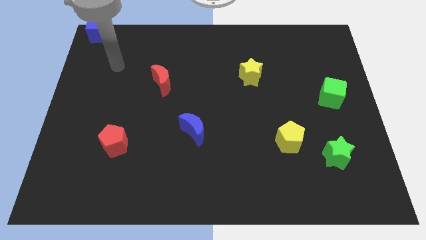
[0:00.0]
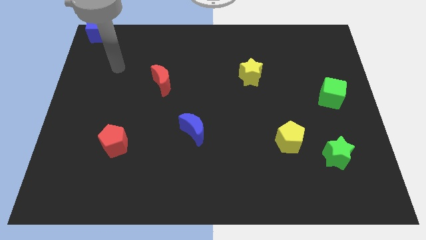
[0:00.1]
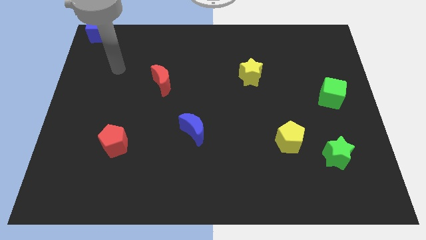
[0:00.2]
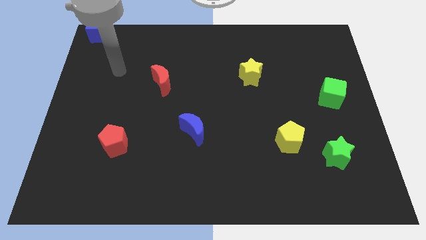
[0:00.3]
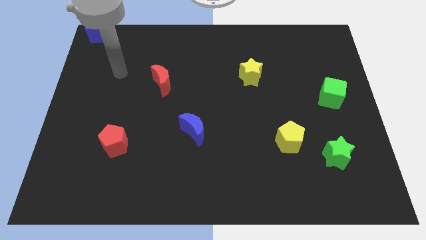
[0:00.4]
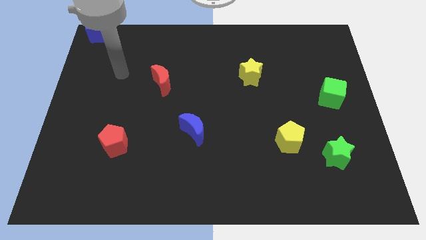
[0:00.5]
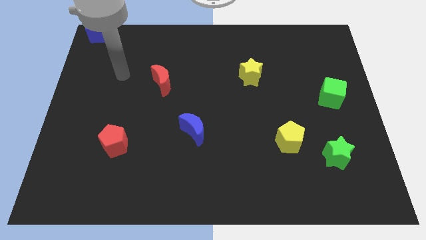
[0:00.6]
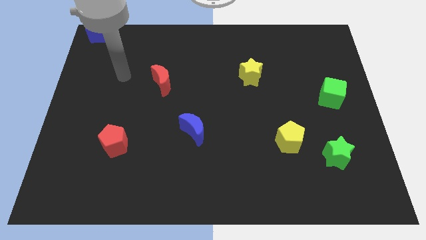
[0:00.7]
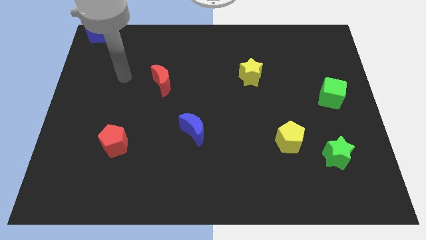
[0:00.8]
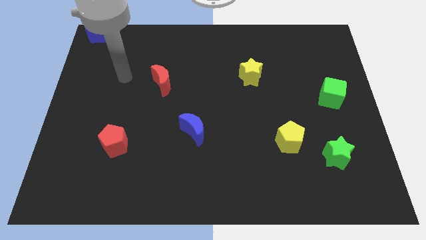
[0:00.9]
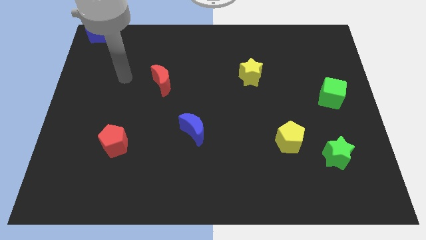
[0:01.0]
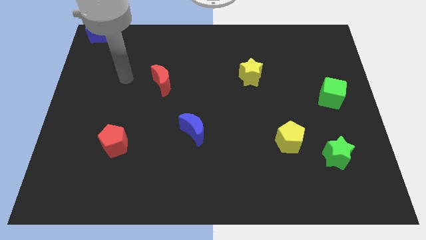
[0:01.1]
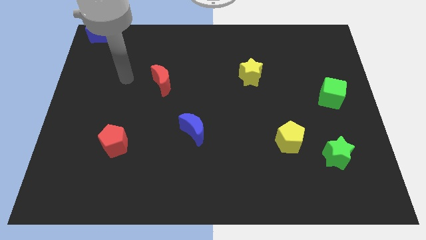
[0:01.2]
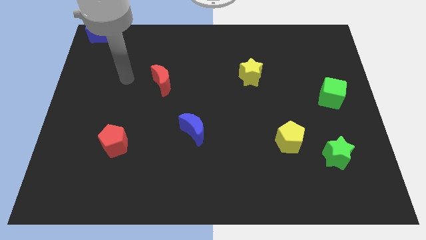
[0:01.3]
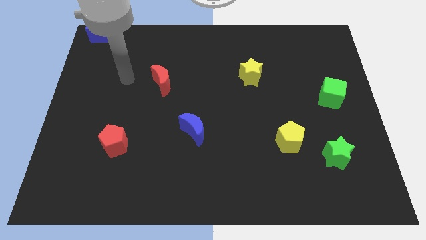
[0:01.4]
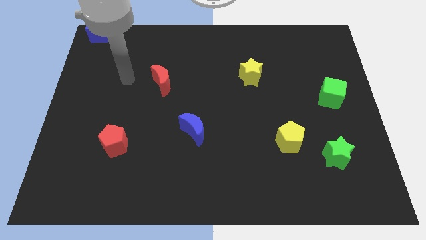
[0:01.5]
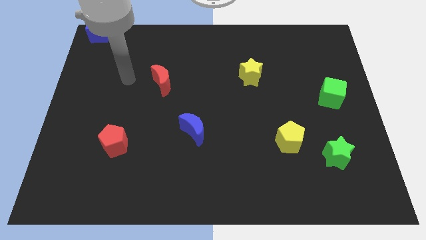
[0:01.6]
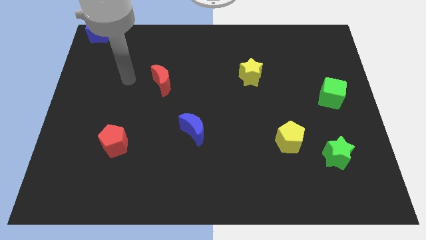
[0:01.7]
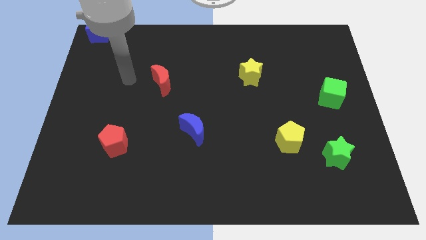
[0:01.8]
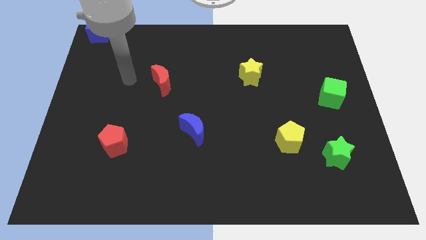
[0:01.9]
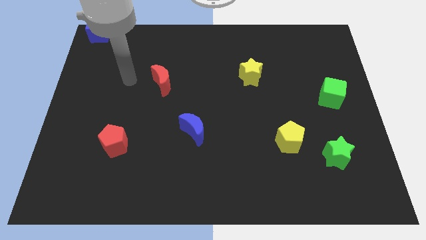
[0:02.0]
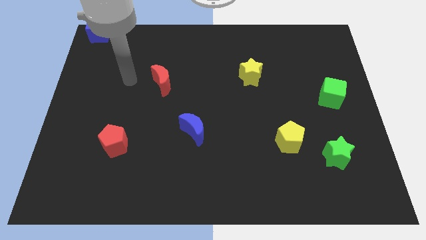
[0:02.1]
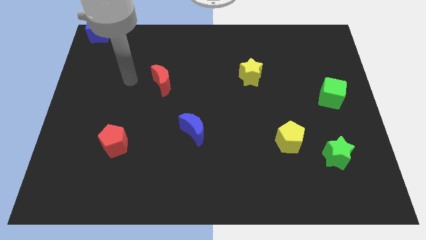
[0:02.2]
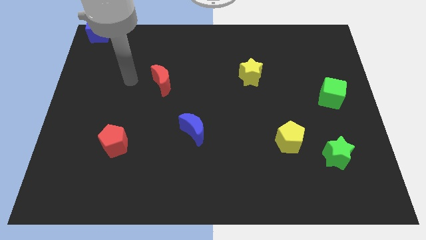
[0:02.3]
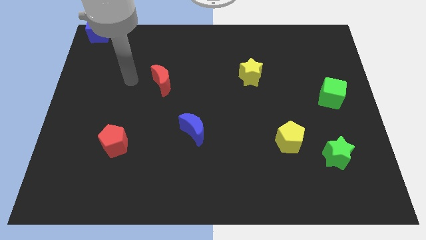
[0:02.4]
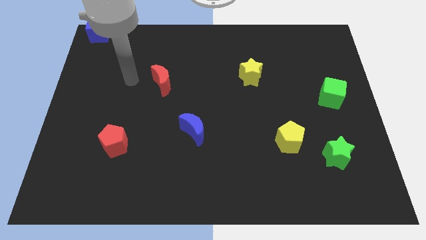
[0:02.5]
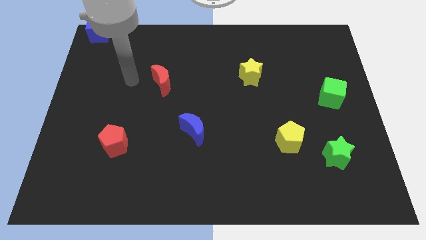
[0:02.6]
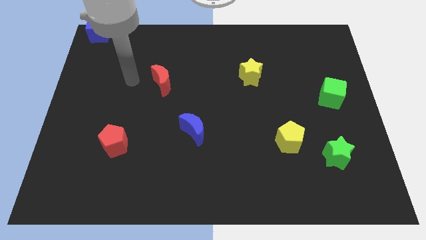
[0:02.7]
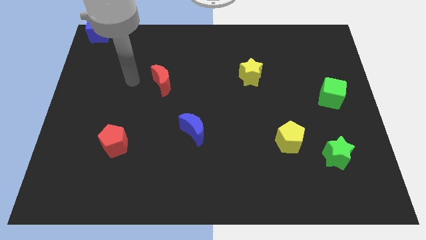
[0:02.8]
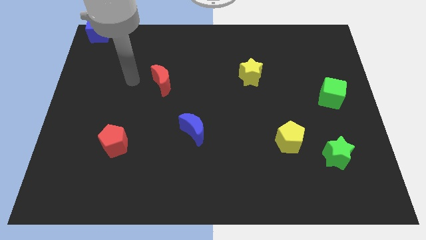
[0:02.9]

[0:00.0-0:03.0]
point the arm to the left of red moon

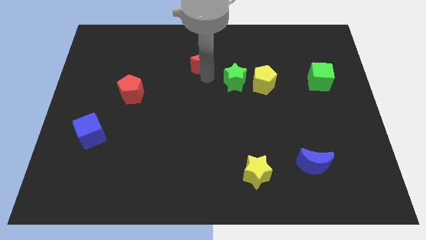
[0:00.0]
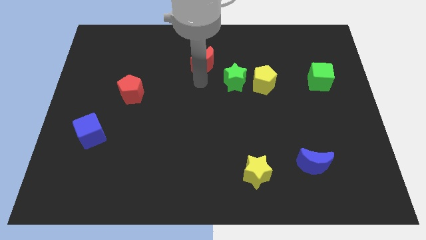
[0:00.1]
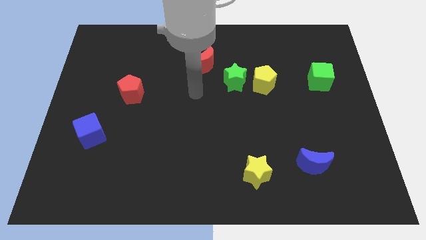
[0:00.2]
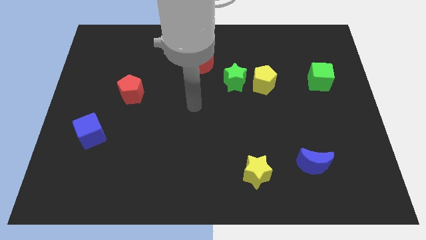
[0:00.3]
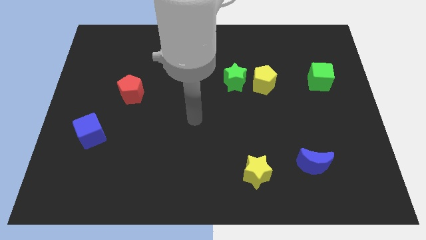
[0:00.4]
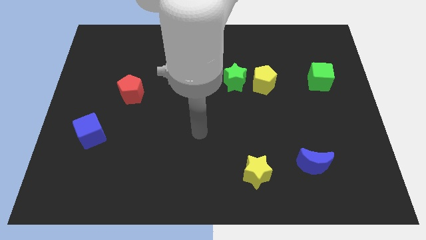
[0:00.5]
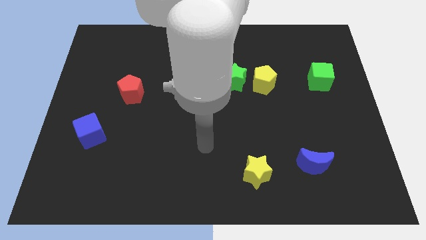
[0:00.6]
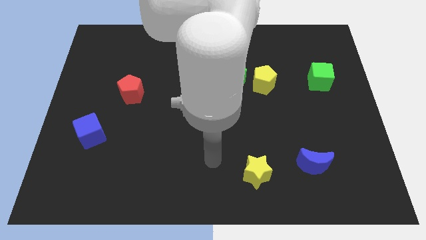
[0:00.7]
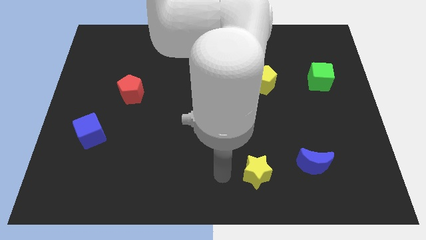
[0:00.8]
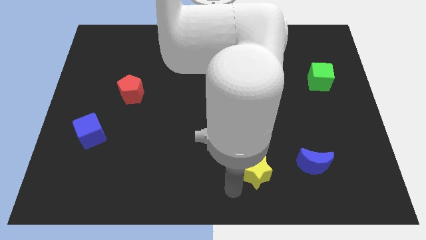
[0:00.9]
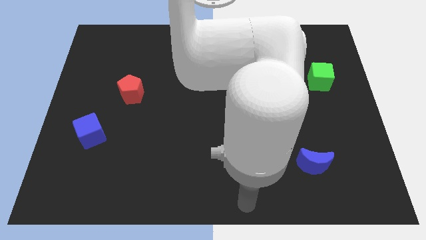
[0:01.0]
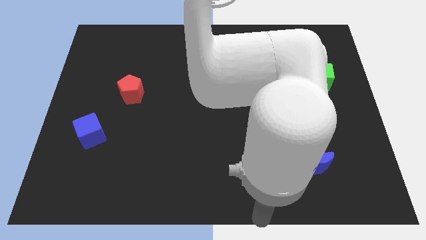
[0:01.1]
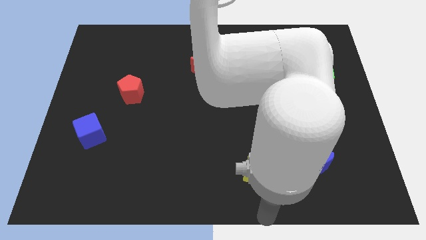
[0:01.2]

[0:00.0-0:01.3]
place your arm at the bottom center of the board

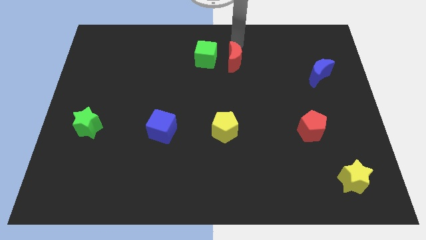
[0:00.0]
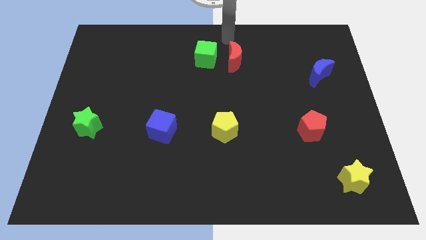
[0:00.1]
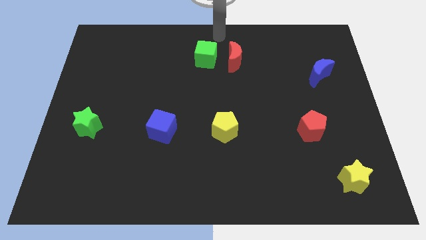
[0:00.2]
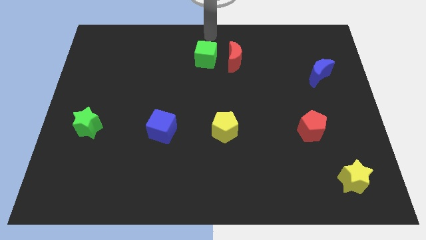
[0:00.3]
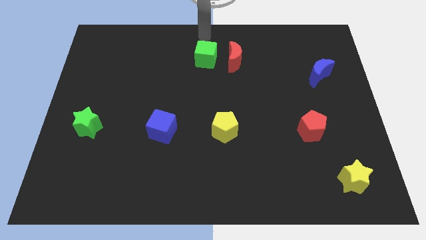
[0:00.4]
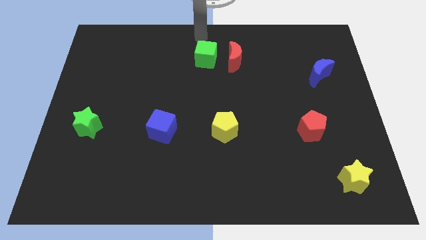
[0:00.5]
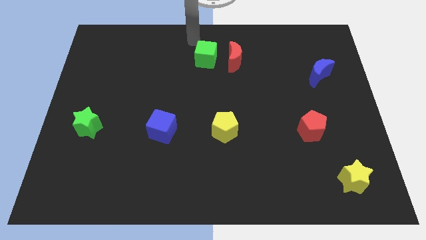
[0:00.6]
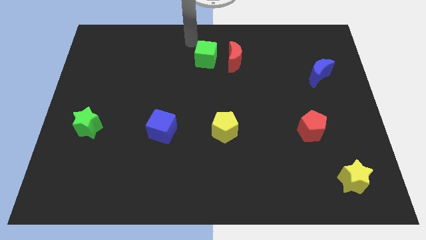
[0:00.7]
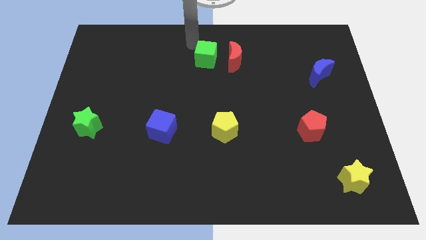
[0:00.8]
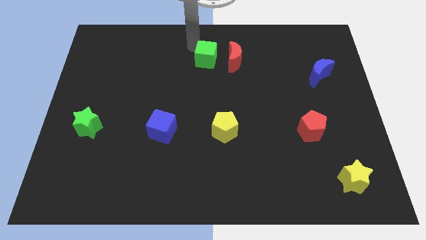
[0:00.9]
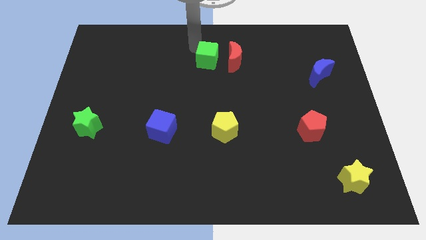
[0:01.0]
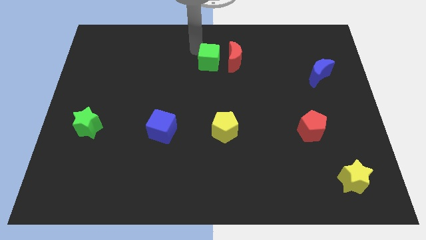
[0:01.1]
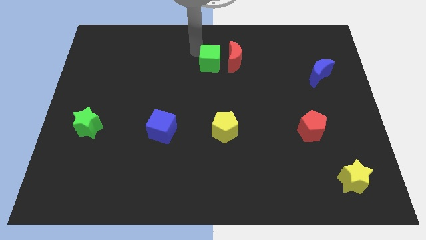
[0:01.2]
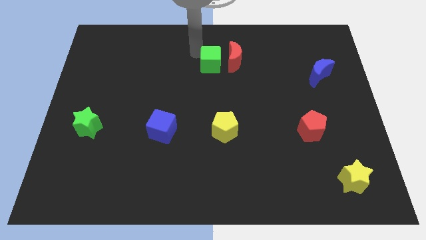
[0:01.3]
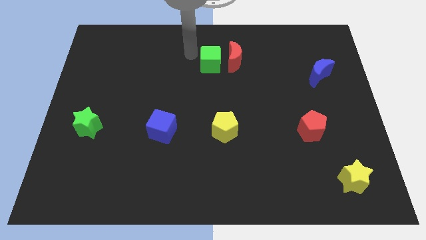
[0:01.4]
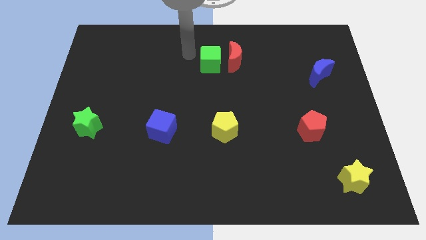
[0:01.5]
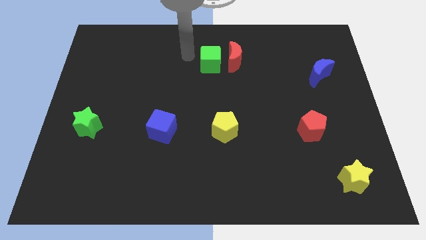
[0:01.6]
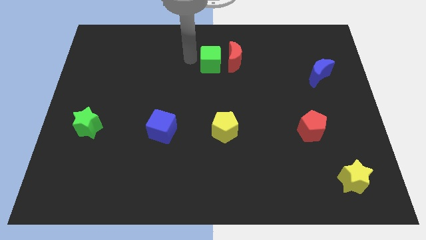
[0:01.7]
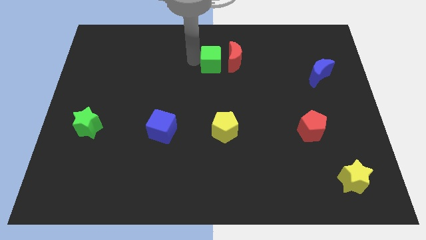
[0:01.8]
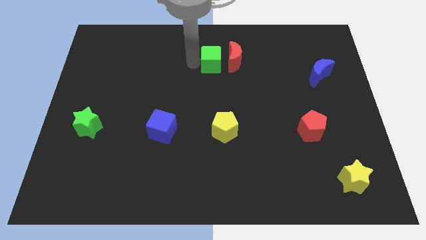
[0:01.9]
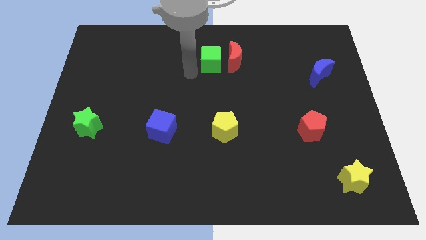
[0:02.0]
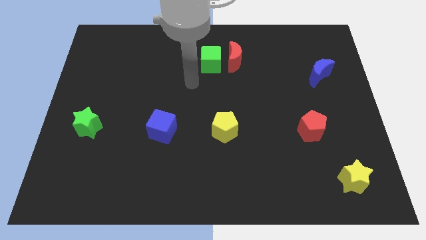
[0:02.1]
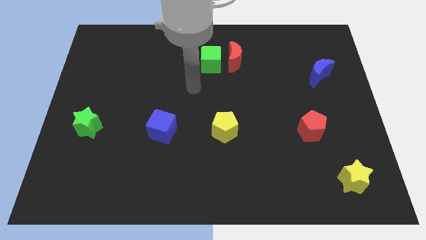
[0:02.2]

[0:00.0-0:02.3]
touch left to the green cube

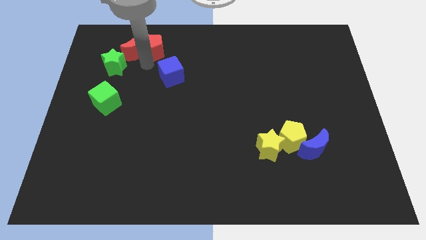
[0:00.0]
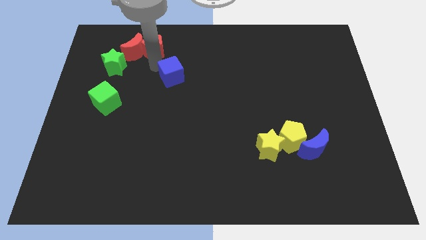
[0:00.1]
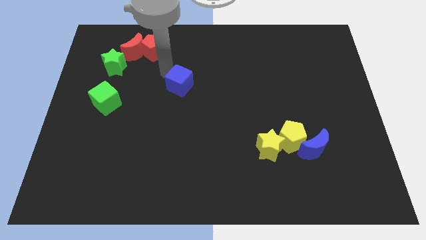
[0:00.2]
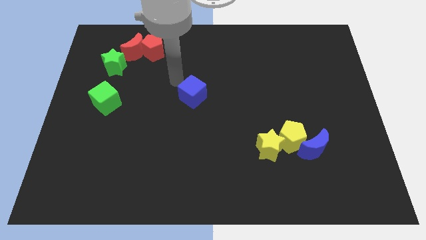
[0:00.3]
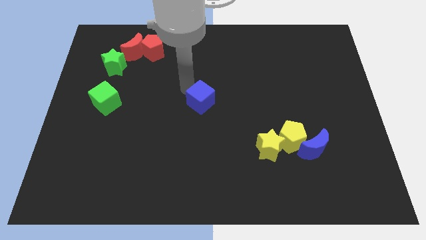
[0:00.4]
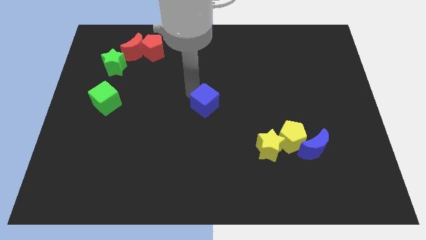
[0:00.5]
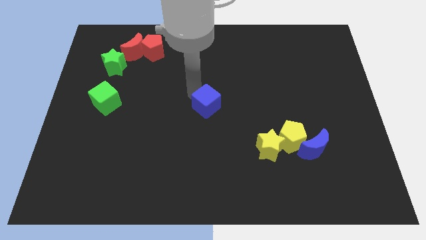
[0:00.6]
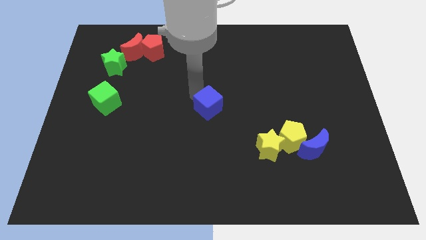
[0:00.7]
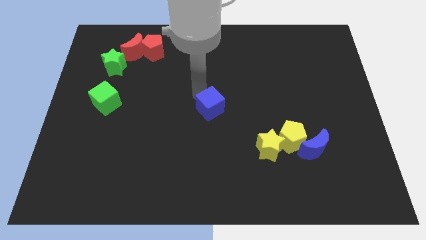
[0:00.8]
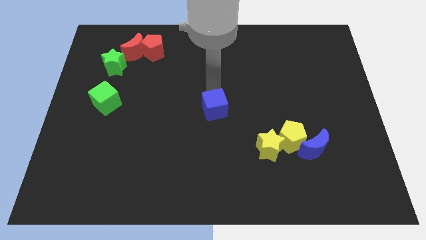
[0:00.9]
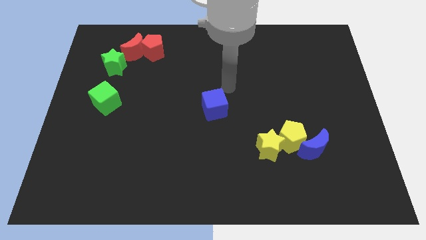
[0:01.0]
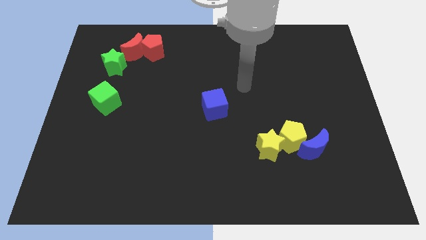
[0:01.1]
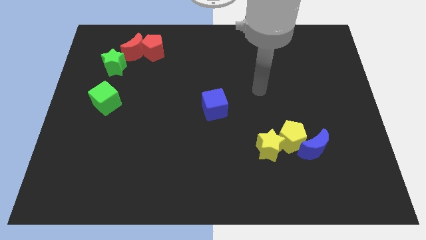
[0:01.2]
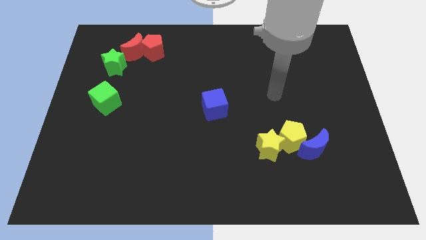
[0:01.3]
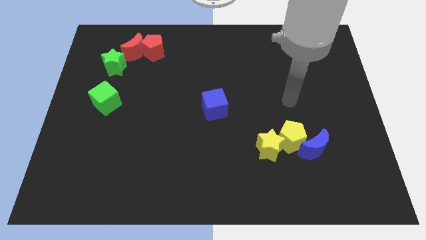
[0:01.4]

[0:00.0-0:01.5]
place the blue cube at the center of the board

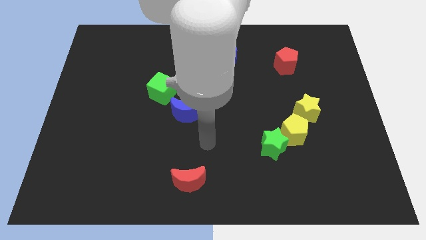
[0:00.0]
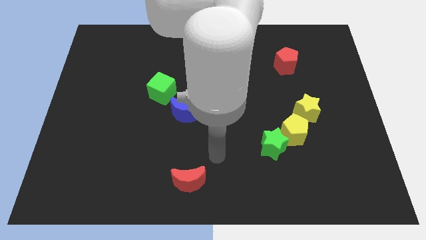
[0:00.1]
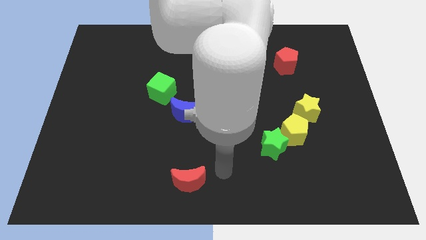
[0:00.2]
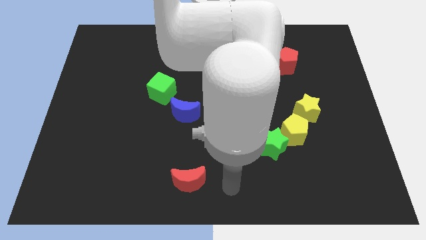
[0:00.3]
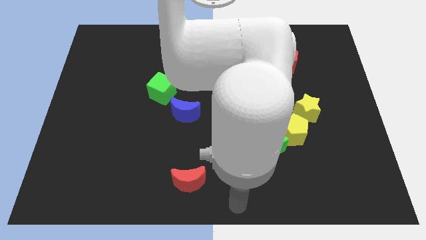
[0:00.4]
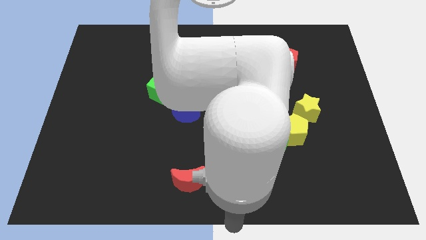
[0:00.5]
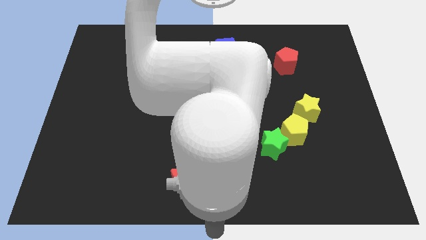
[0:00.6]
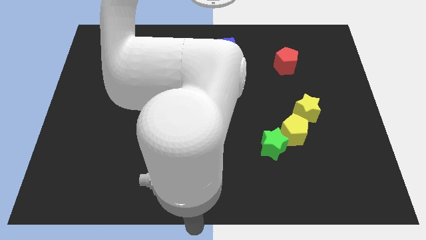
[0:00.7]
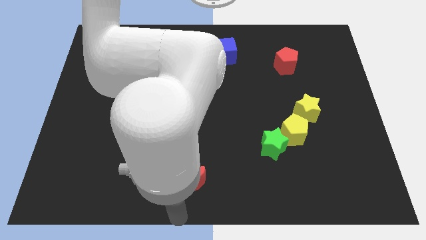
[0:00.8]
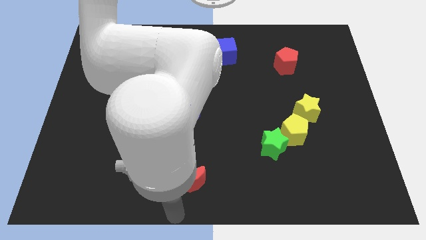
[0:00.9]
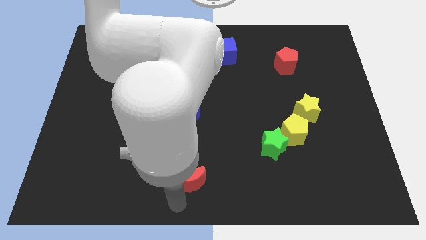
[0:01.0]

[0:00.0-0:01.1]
place your arm to the bottom side of the red moon
